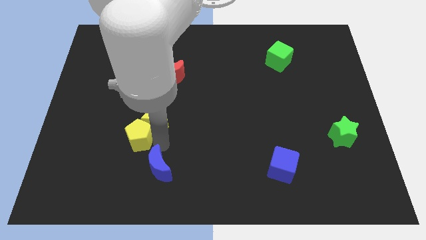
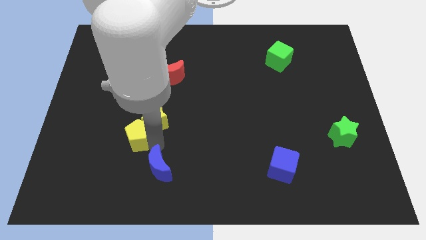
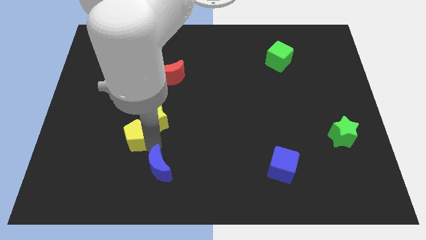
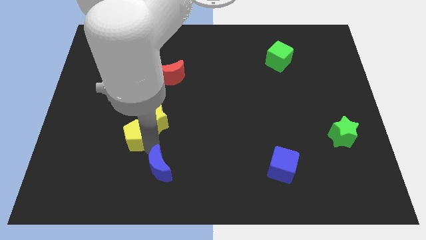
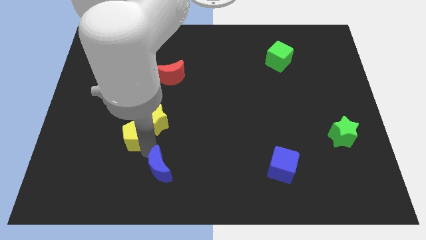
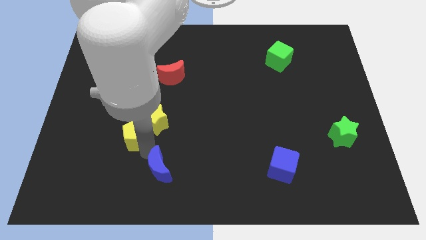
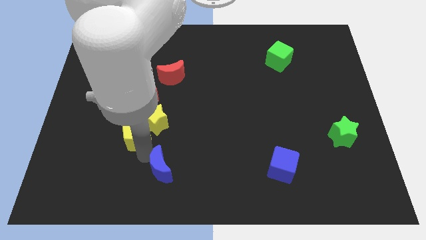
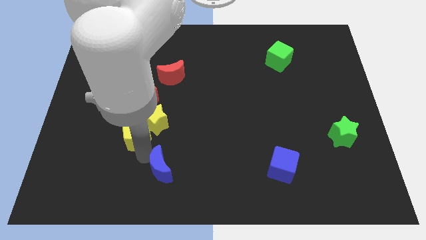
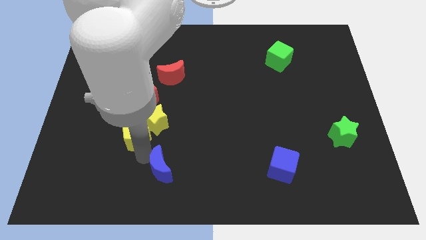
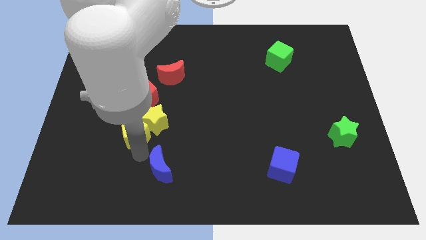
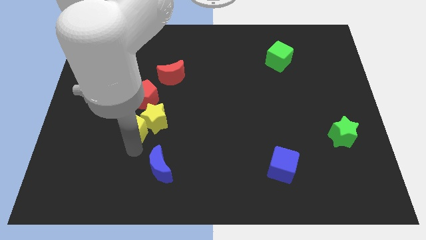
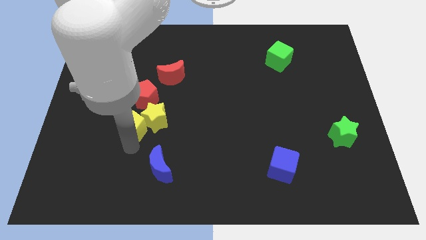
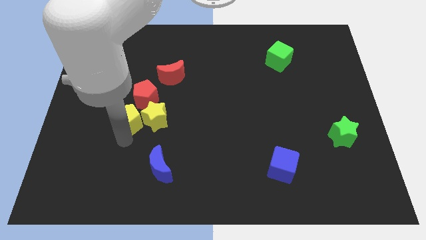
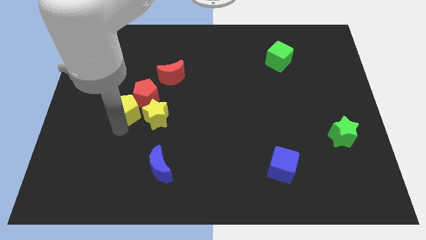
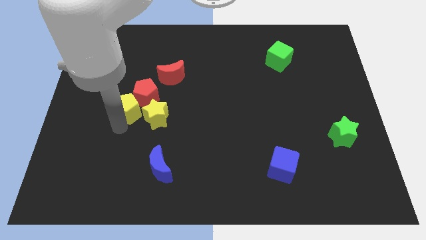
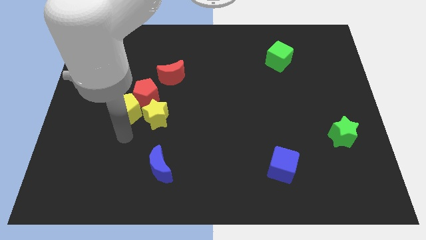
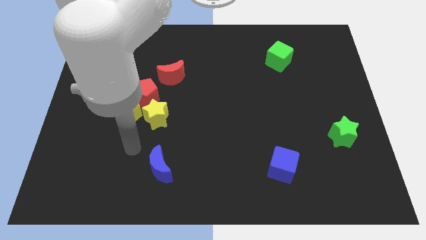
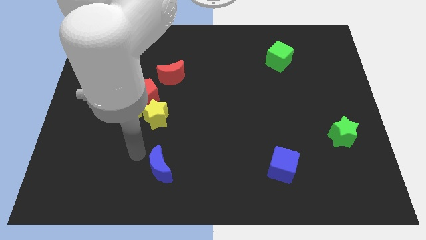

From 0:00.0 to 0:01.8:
push the yellow pentagon upwards slightly

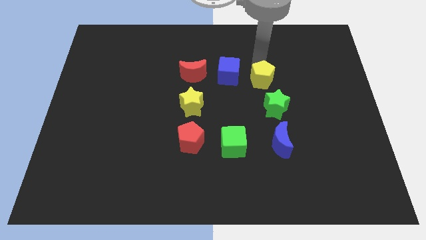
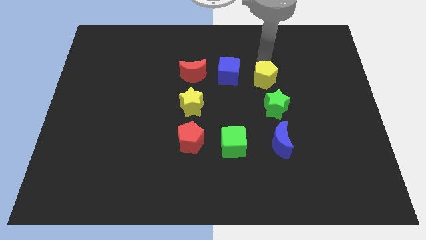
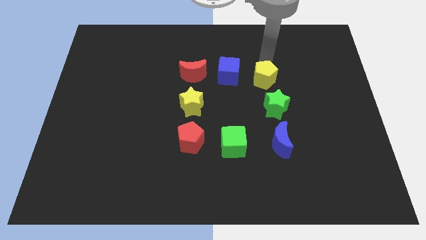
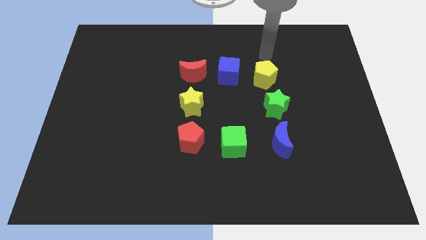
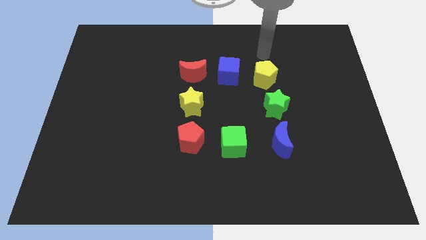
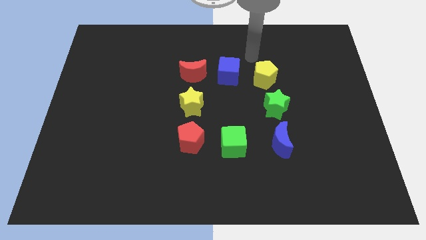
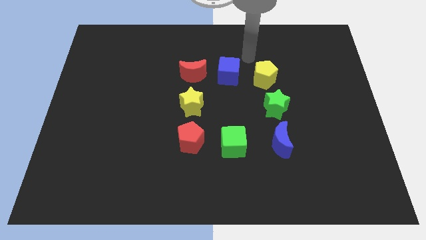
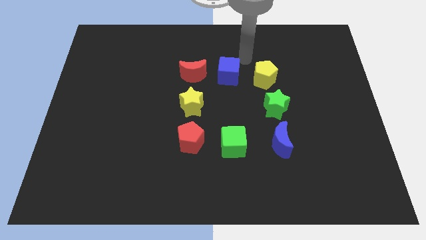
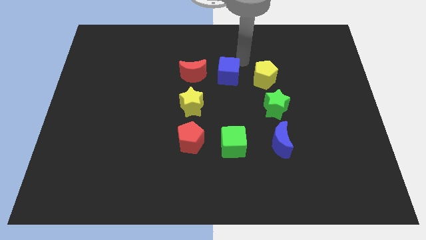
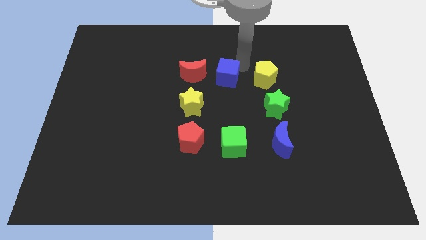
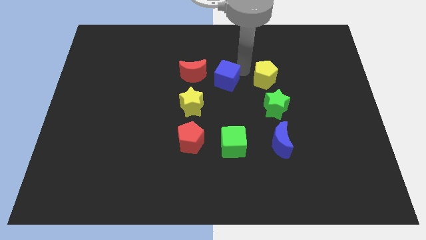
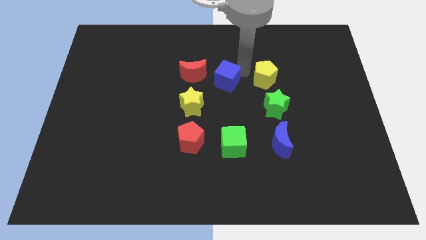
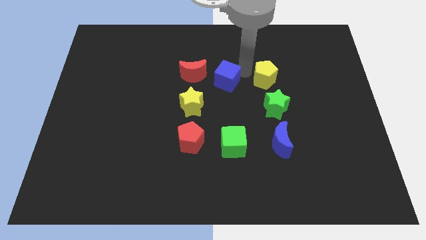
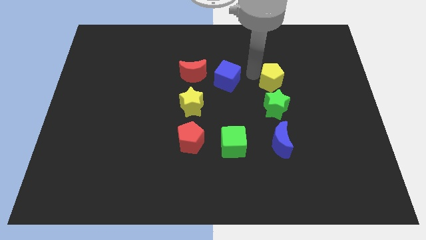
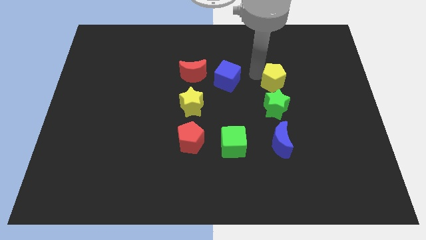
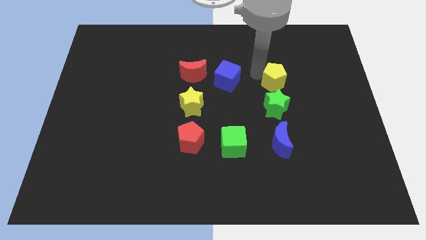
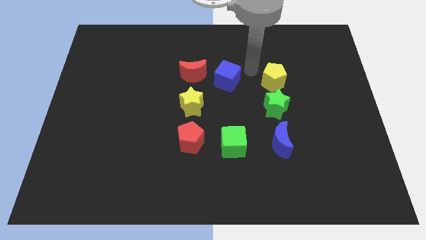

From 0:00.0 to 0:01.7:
drag the yellow pentagon above the green star

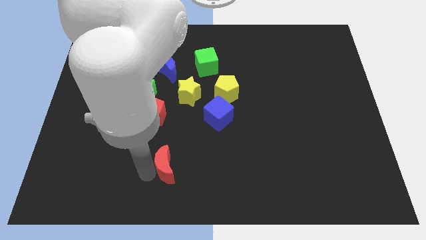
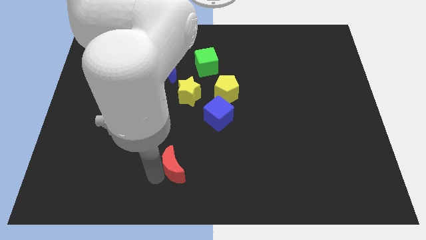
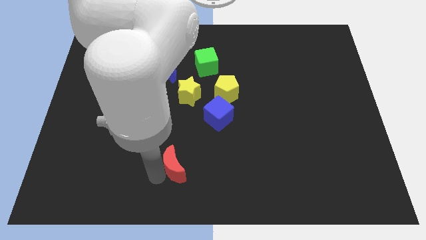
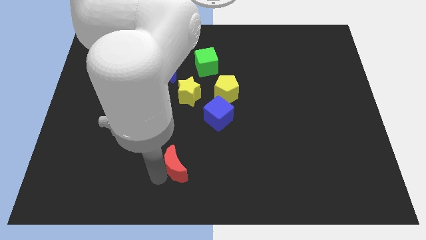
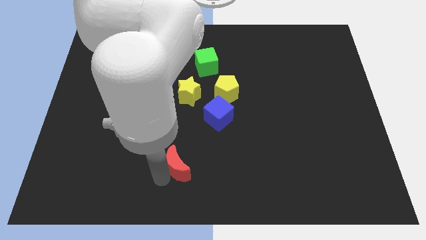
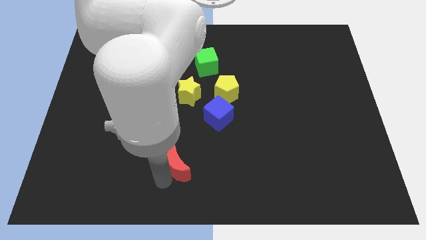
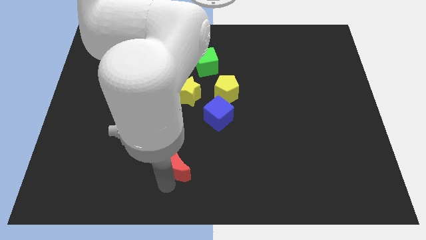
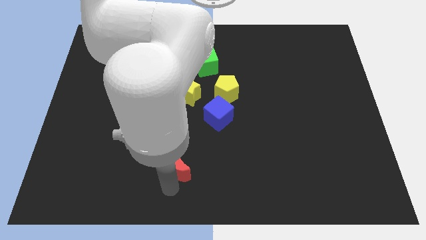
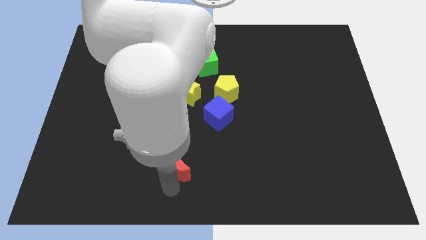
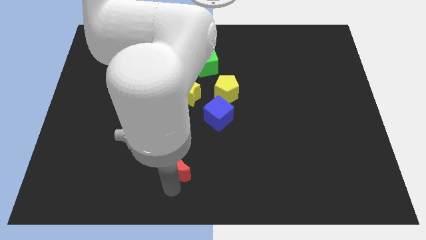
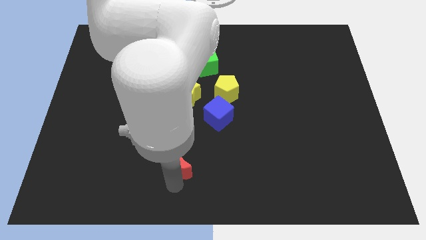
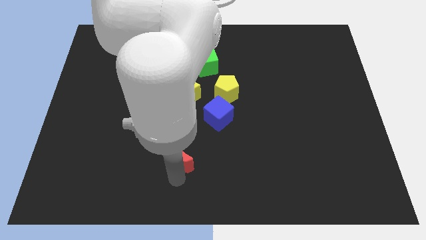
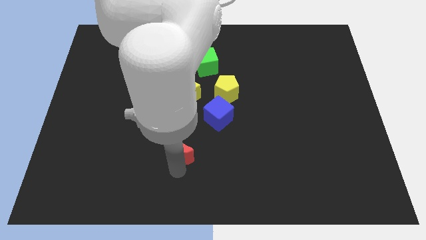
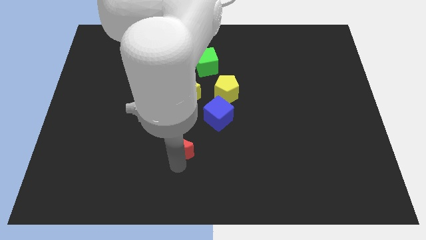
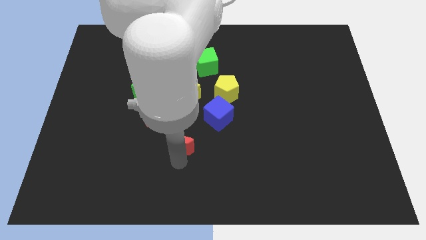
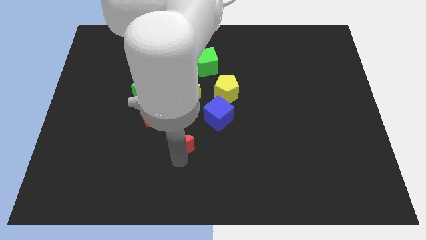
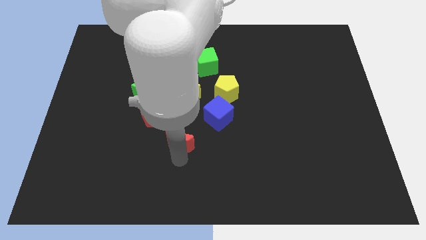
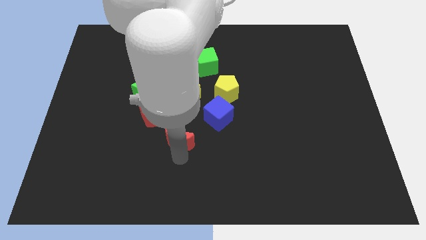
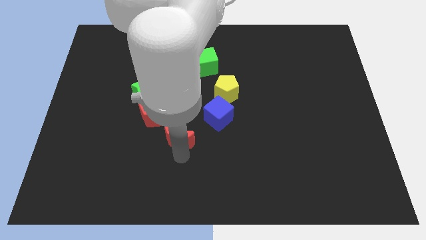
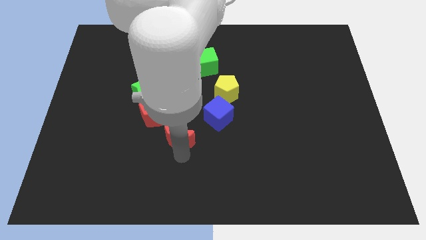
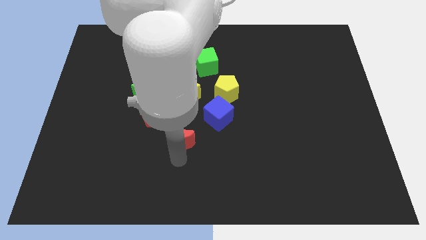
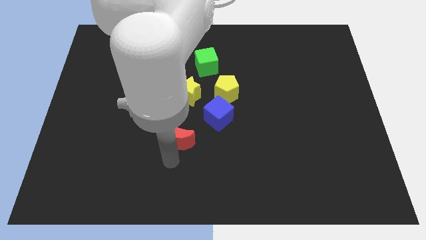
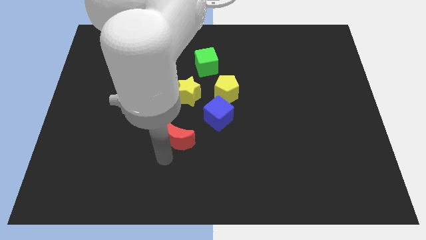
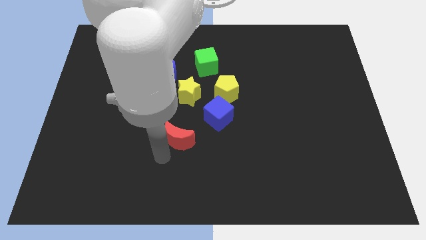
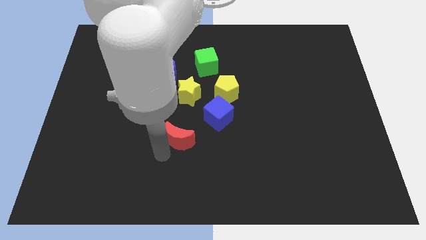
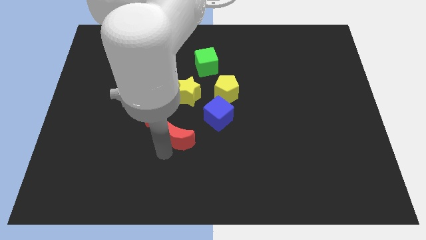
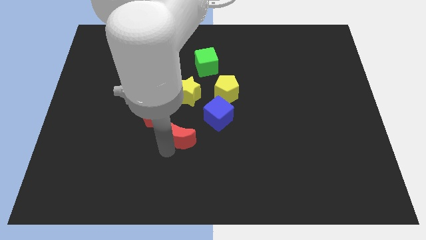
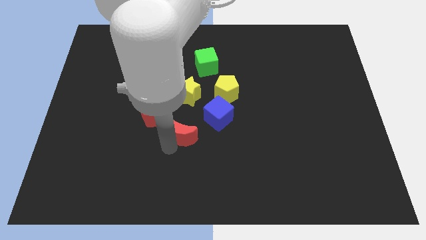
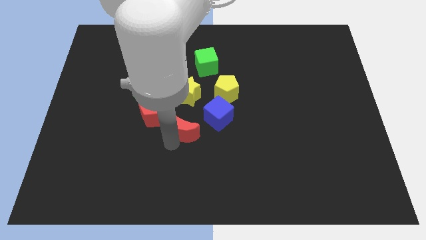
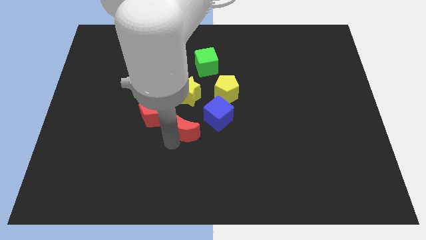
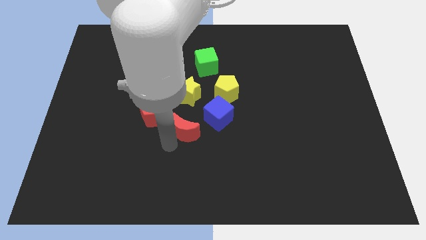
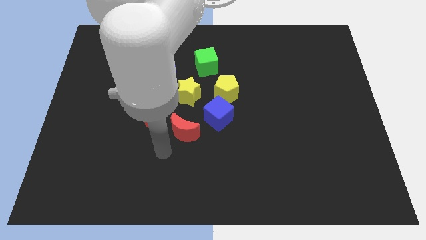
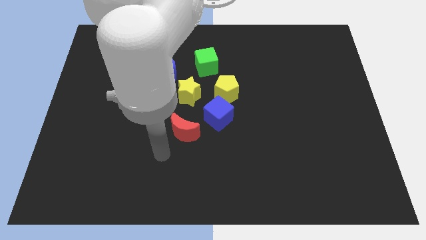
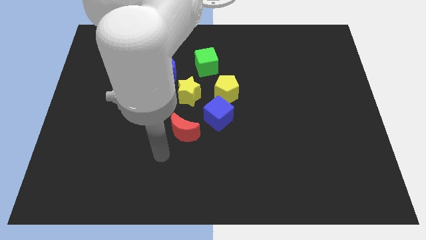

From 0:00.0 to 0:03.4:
push the red crescent towards the center of the board

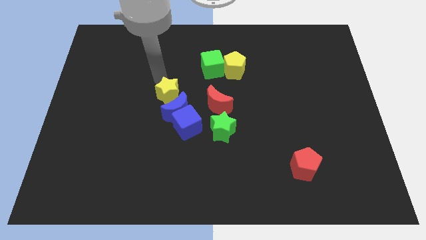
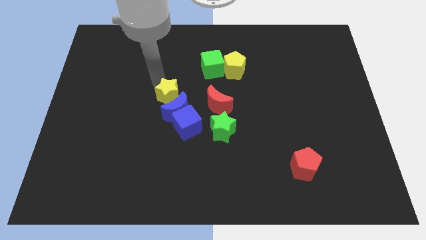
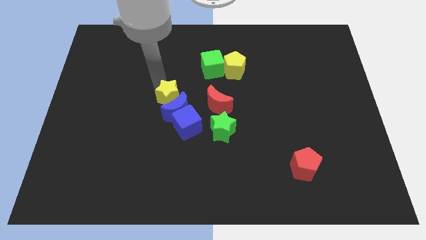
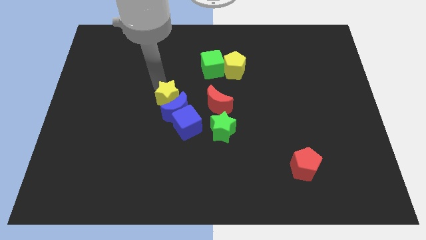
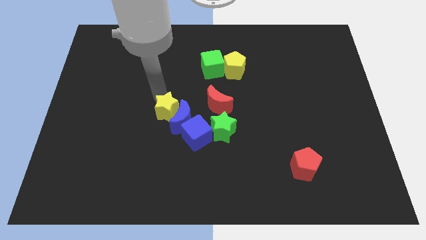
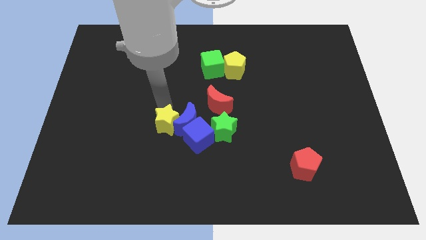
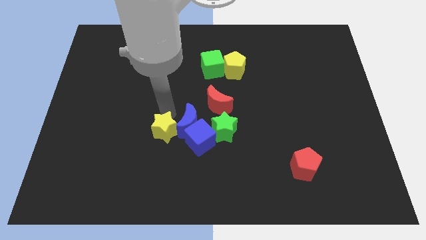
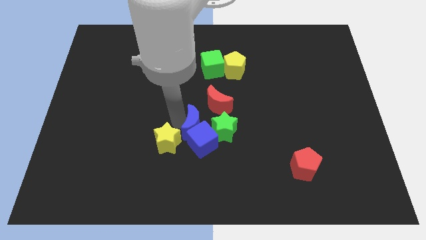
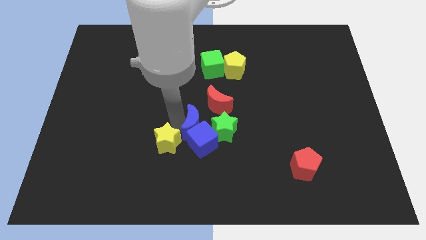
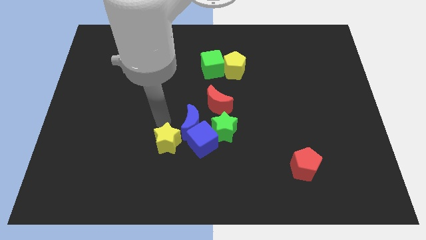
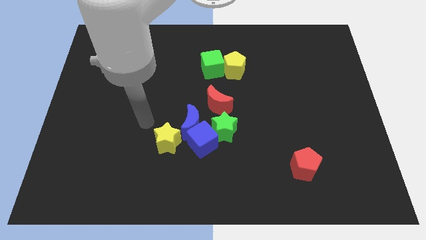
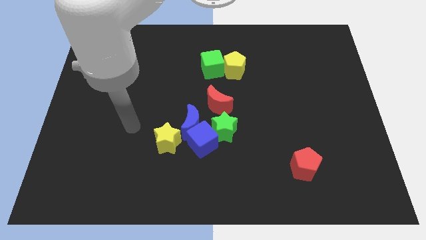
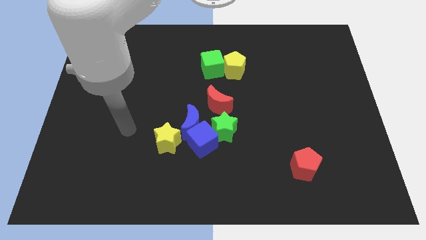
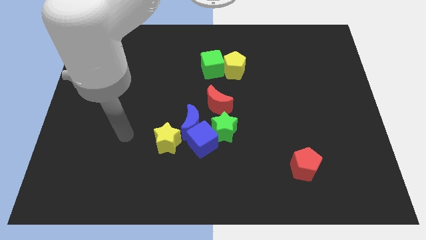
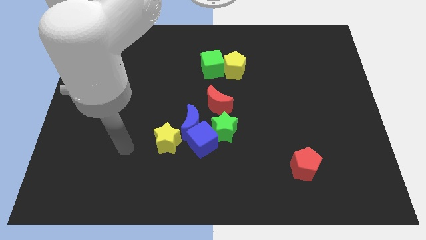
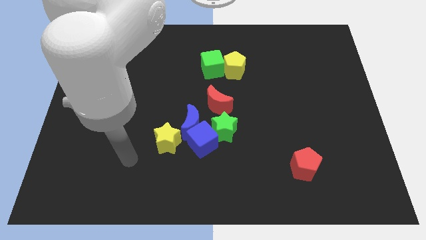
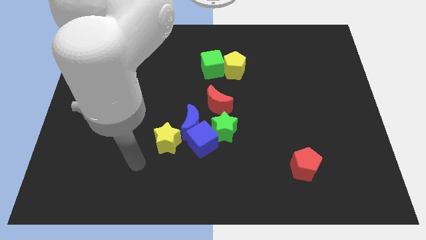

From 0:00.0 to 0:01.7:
push the yellow star into the blue blocks

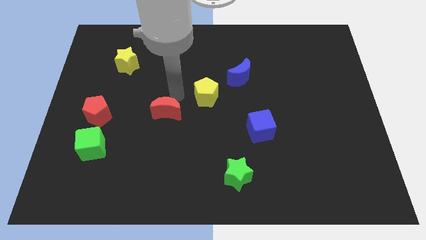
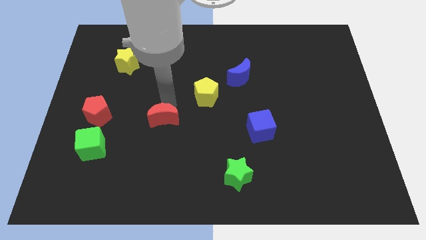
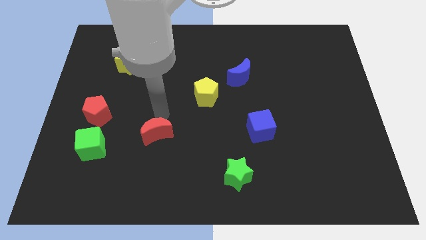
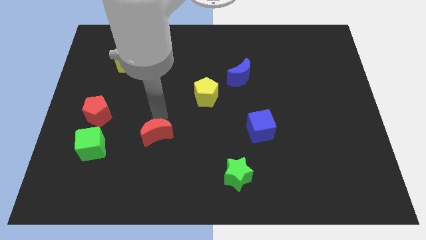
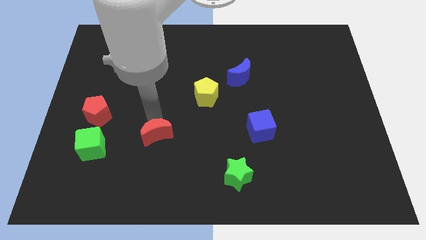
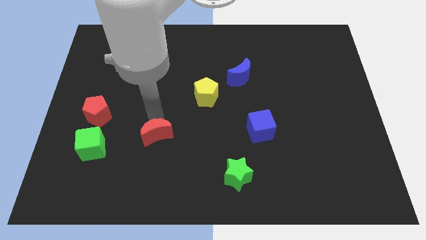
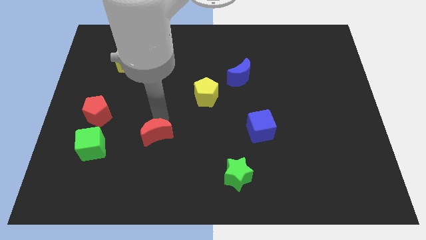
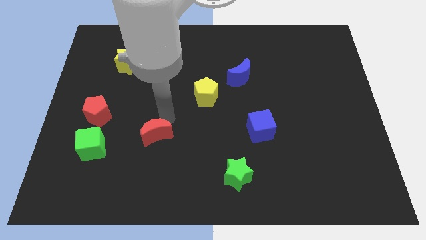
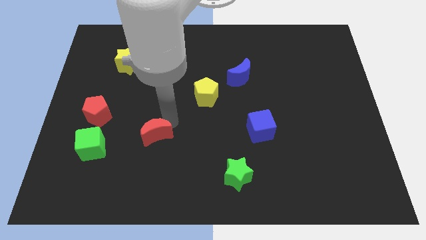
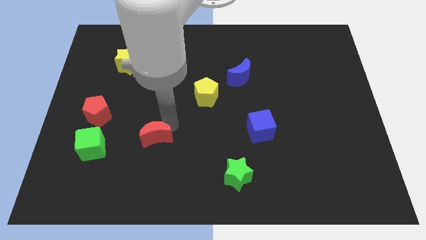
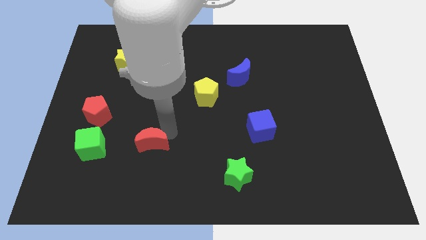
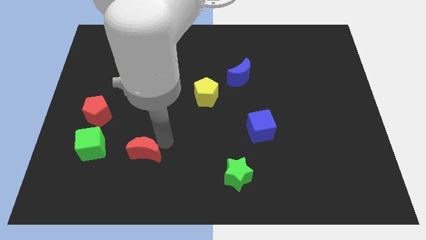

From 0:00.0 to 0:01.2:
place red moon to the right of green cube
